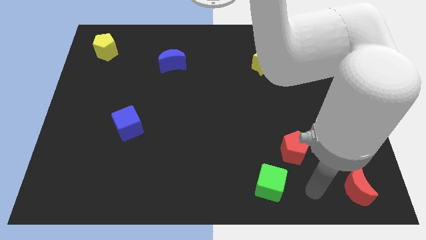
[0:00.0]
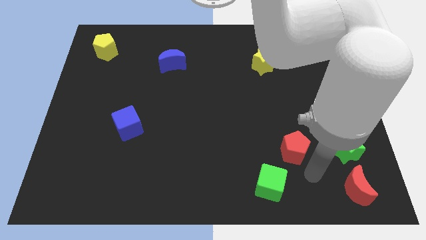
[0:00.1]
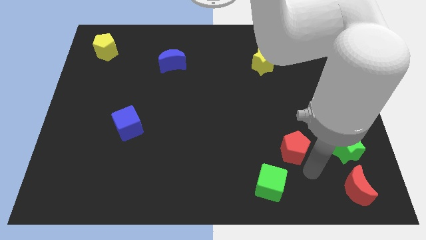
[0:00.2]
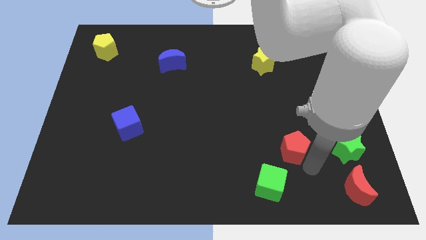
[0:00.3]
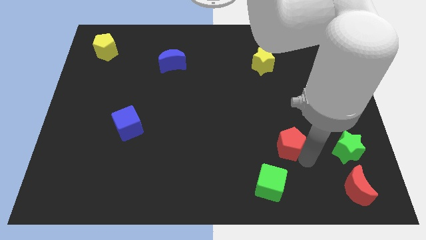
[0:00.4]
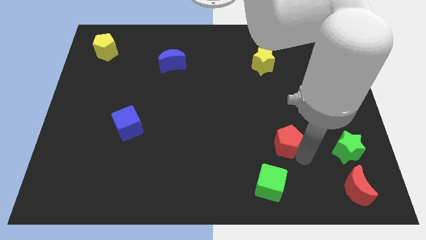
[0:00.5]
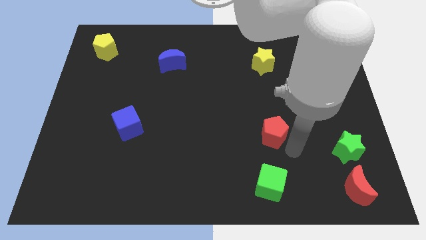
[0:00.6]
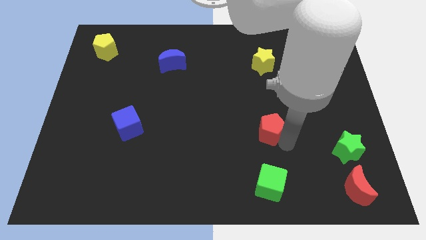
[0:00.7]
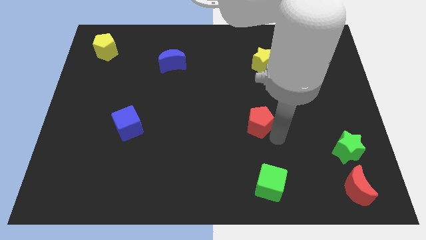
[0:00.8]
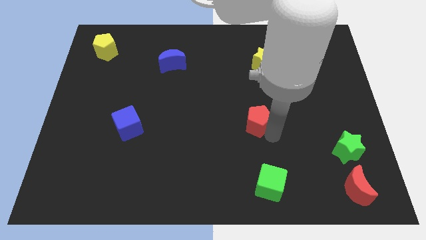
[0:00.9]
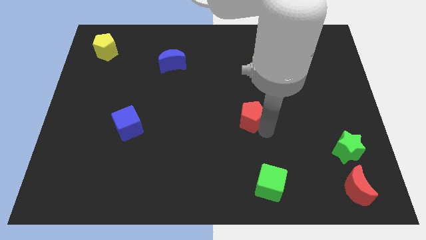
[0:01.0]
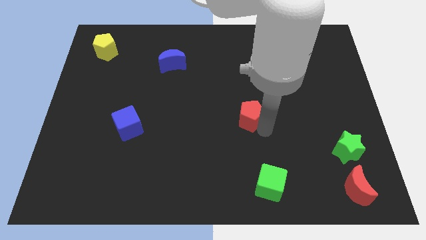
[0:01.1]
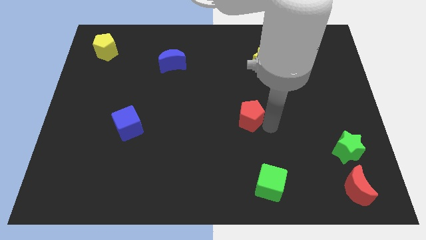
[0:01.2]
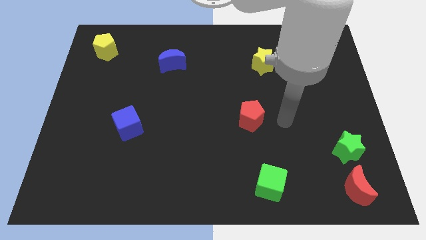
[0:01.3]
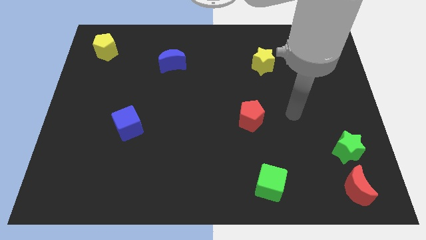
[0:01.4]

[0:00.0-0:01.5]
separate red pentagon from green cube

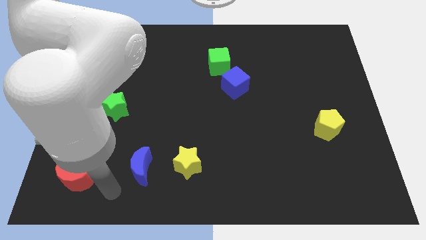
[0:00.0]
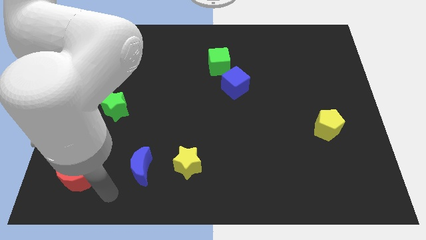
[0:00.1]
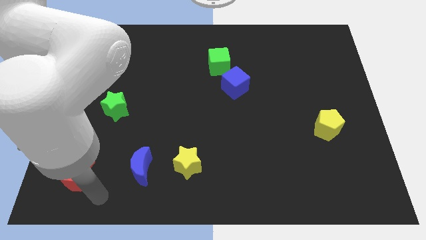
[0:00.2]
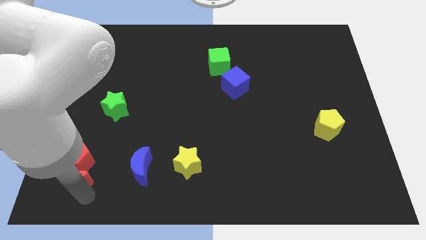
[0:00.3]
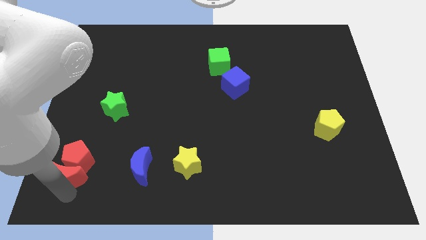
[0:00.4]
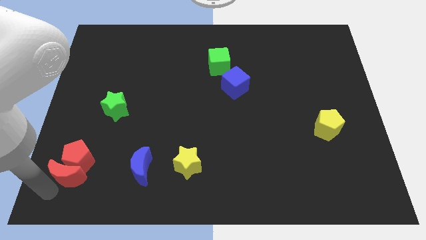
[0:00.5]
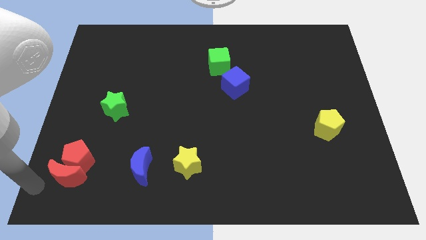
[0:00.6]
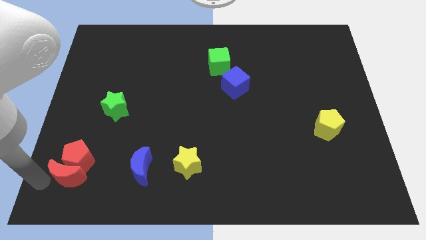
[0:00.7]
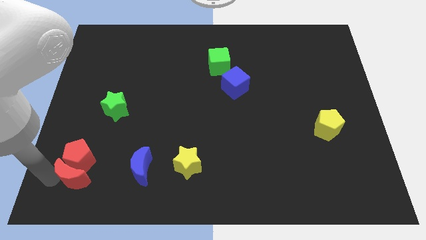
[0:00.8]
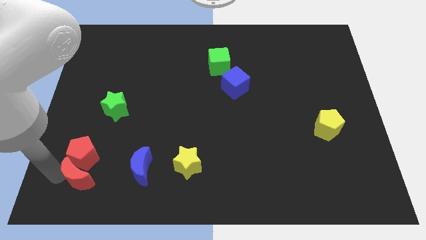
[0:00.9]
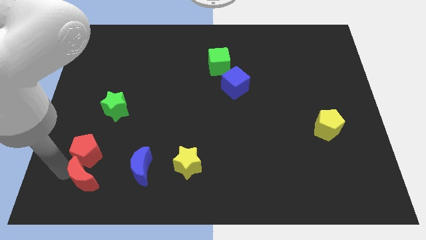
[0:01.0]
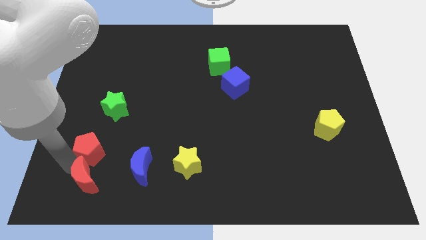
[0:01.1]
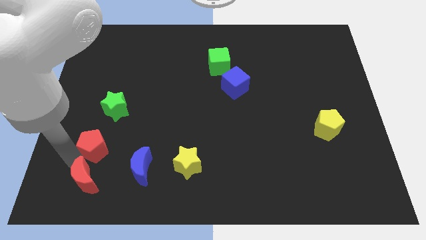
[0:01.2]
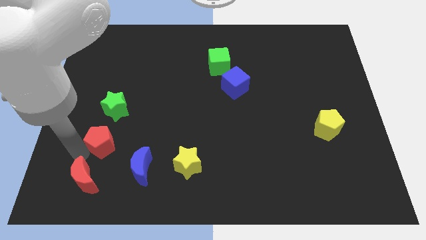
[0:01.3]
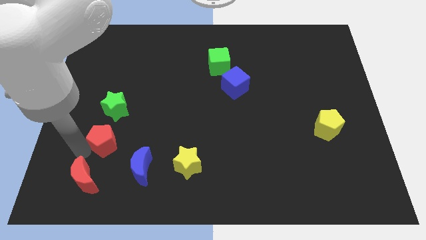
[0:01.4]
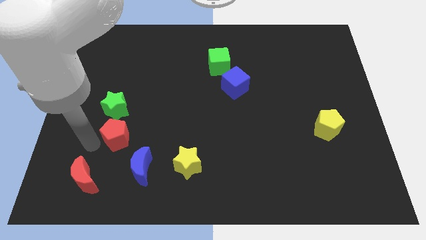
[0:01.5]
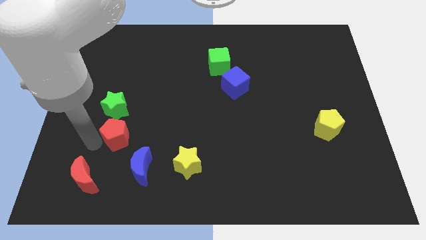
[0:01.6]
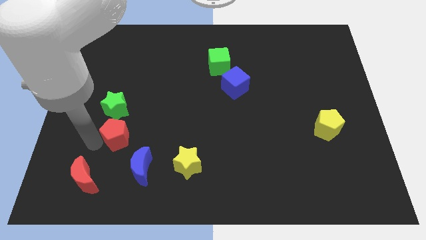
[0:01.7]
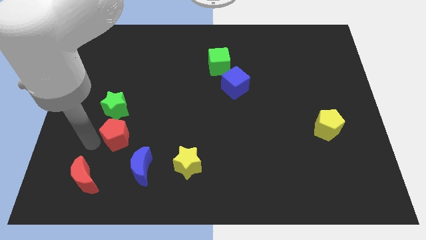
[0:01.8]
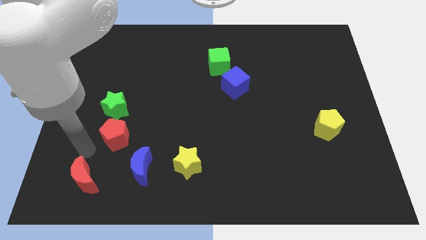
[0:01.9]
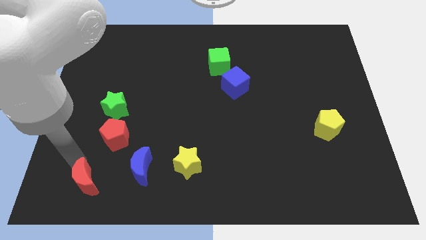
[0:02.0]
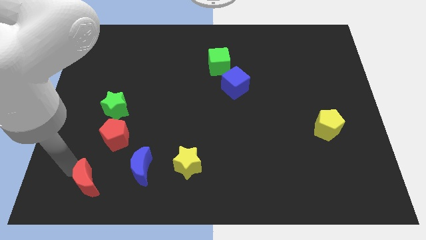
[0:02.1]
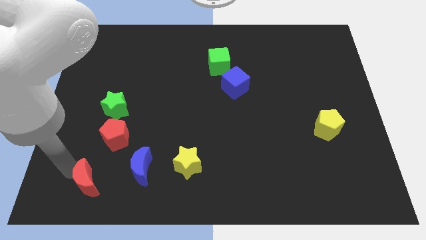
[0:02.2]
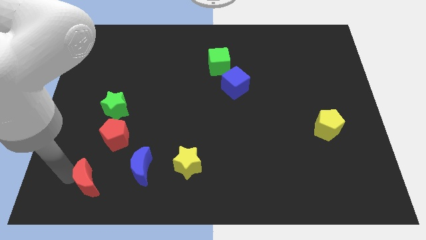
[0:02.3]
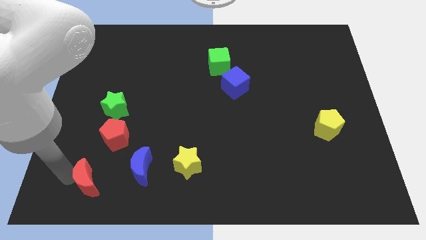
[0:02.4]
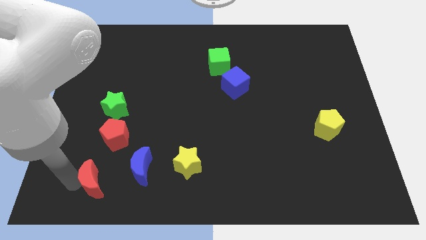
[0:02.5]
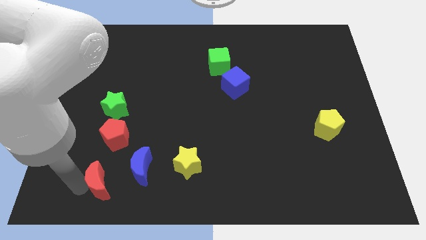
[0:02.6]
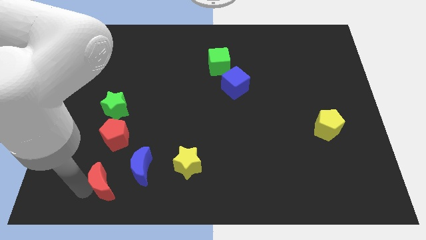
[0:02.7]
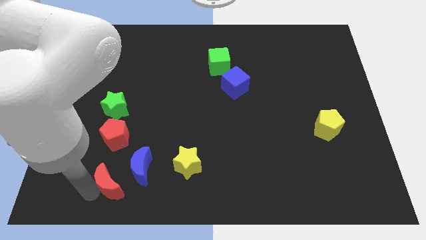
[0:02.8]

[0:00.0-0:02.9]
push red crescent below green star

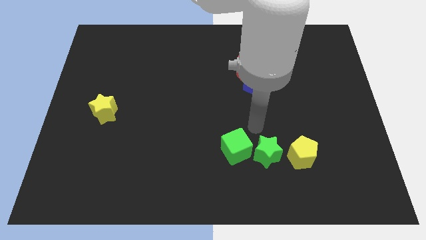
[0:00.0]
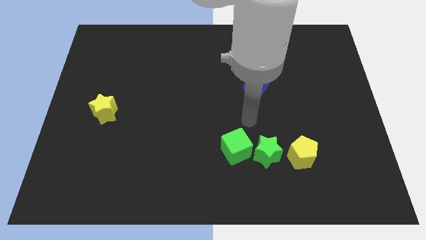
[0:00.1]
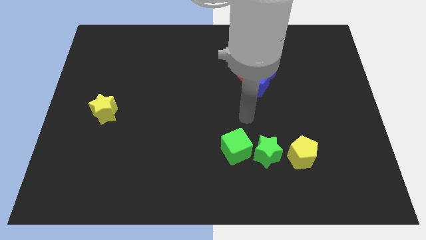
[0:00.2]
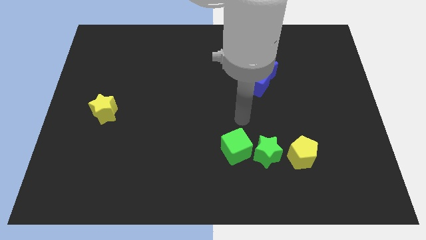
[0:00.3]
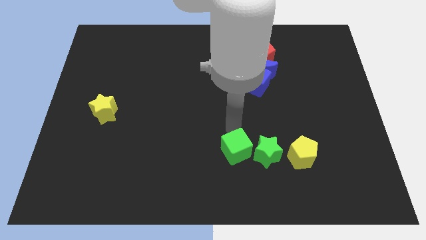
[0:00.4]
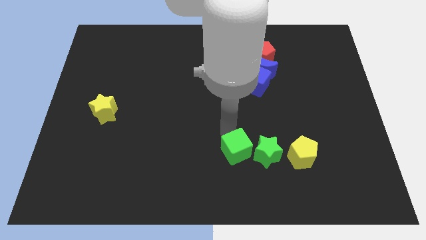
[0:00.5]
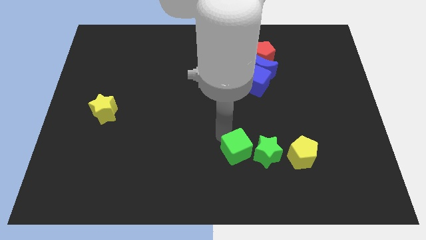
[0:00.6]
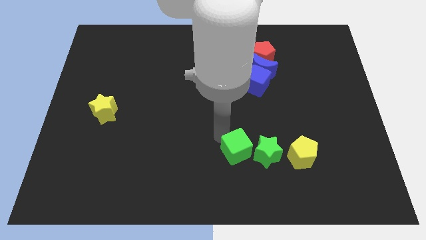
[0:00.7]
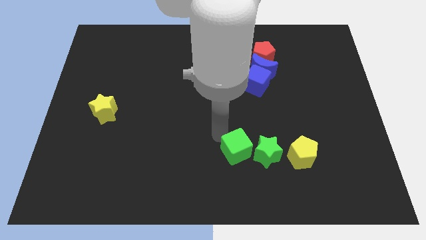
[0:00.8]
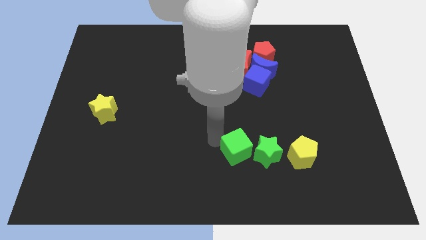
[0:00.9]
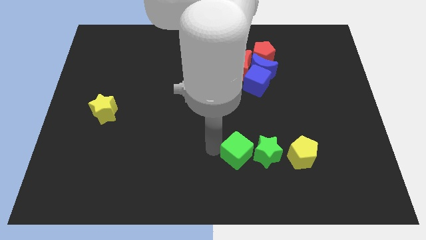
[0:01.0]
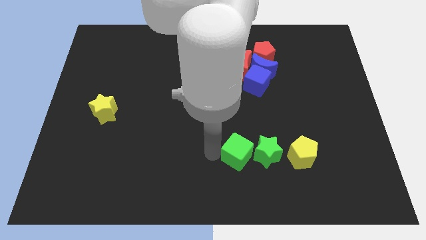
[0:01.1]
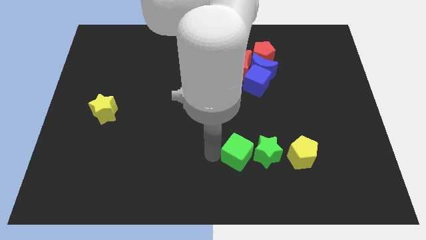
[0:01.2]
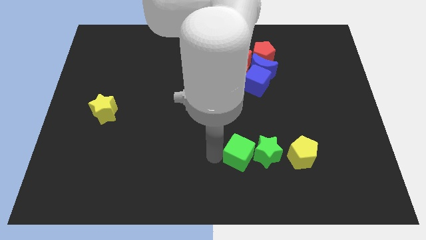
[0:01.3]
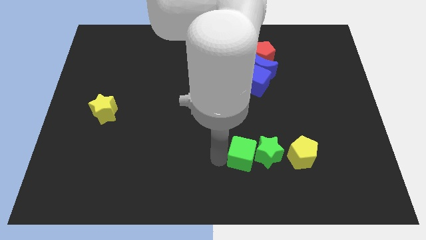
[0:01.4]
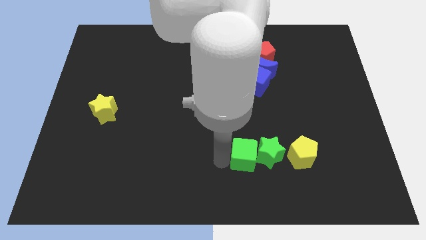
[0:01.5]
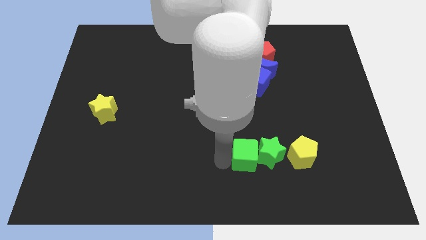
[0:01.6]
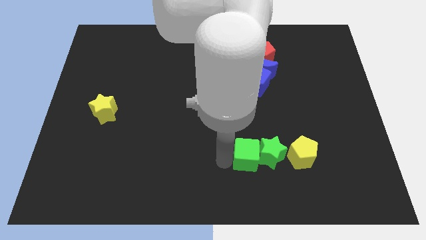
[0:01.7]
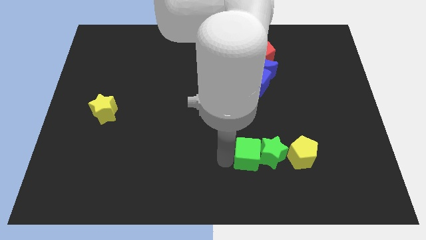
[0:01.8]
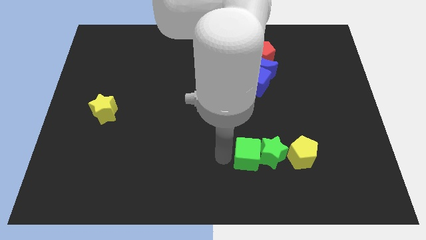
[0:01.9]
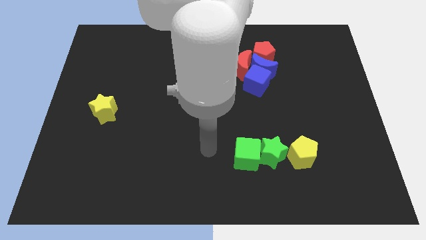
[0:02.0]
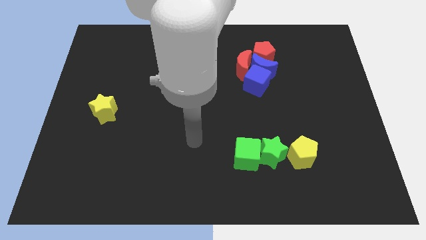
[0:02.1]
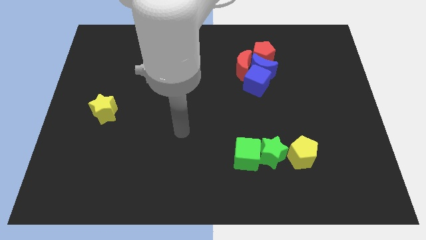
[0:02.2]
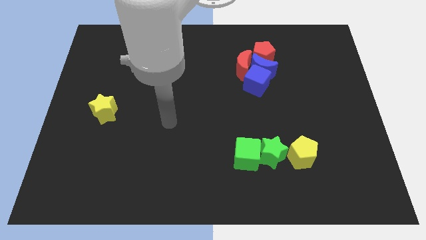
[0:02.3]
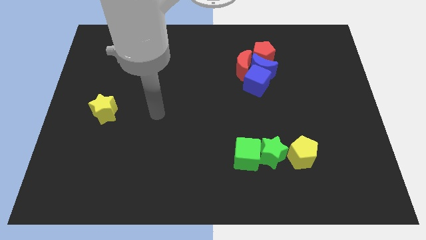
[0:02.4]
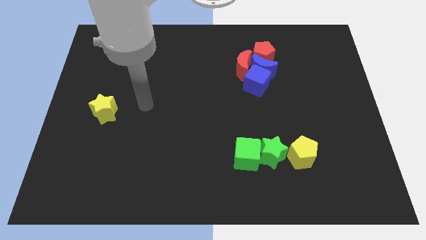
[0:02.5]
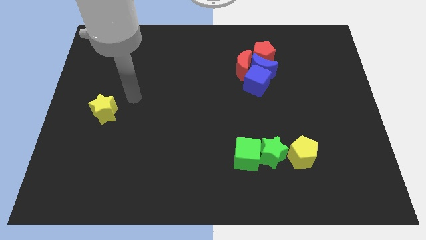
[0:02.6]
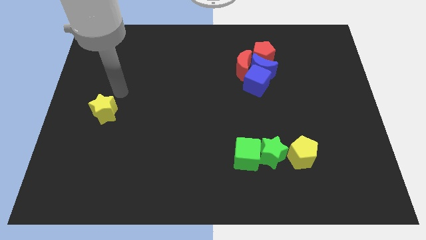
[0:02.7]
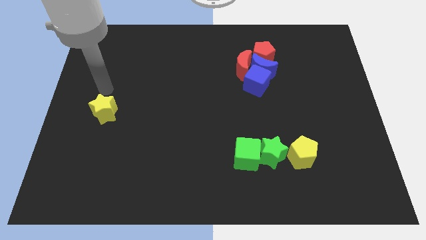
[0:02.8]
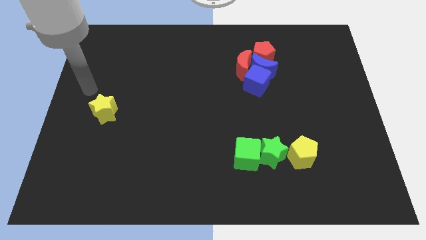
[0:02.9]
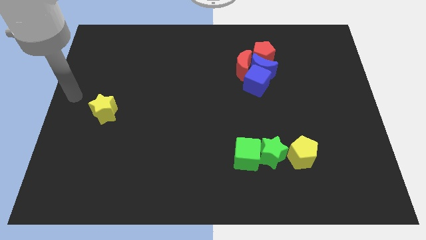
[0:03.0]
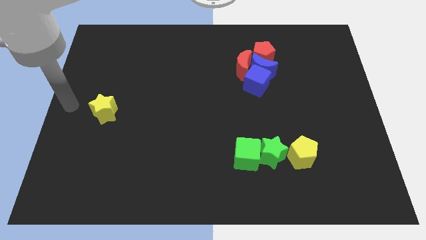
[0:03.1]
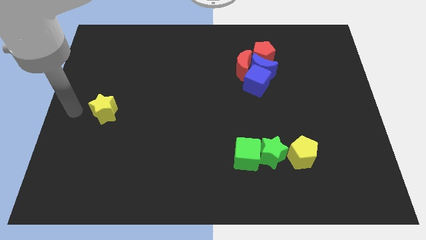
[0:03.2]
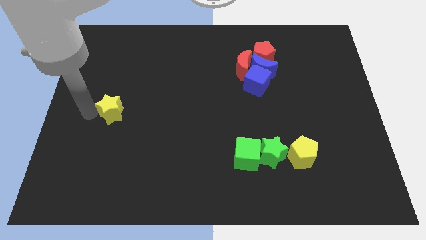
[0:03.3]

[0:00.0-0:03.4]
move your arm to the left side of the yellow star

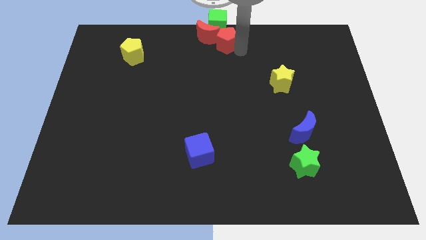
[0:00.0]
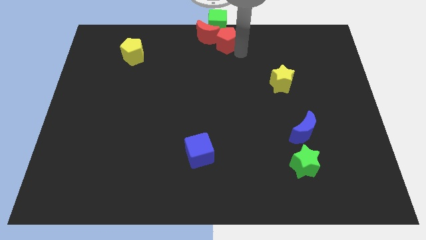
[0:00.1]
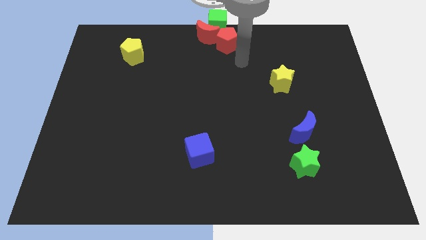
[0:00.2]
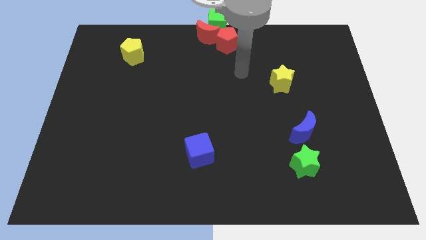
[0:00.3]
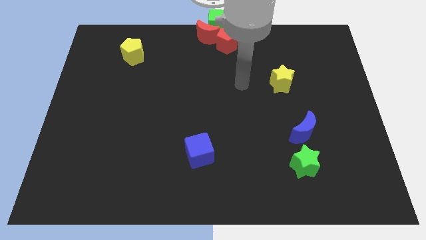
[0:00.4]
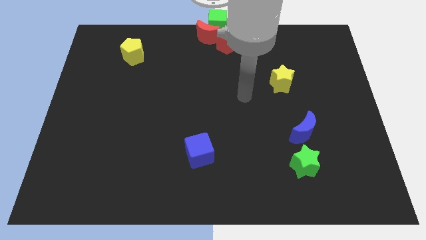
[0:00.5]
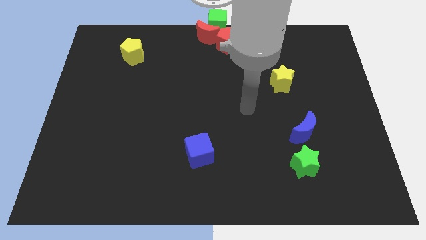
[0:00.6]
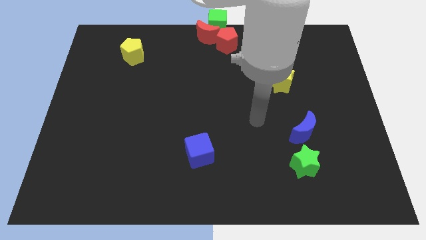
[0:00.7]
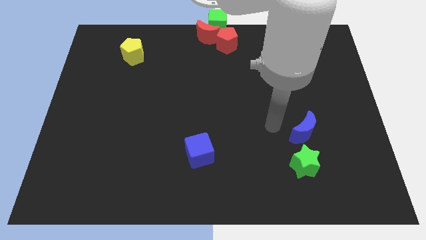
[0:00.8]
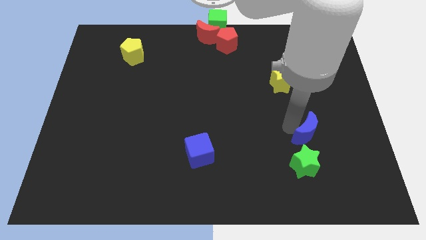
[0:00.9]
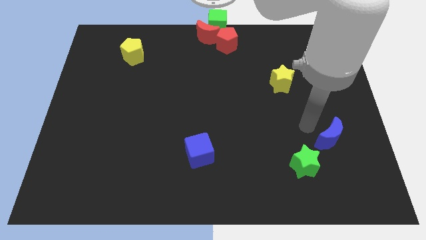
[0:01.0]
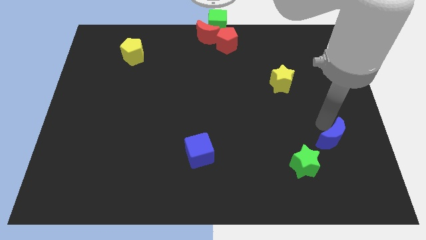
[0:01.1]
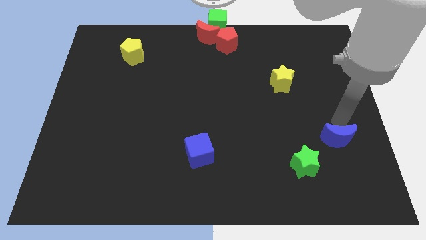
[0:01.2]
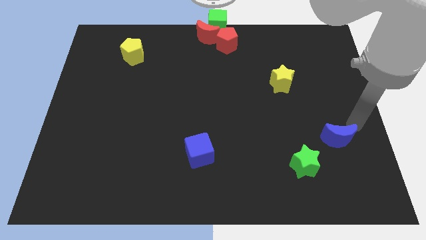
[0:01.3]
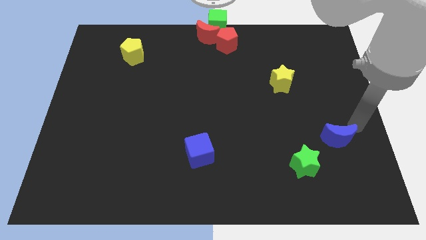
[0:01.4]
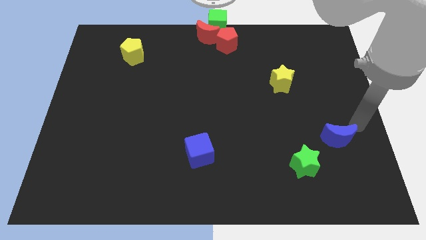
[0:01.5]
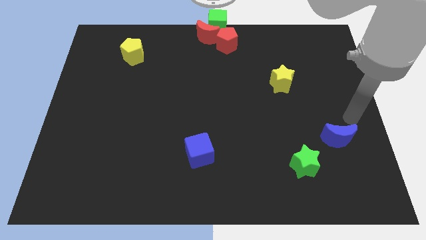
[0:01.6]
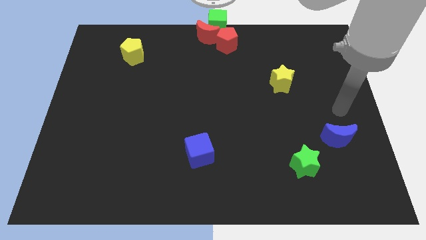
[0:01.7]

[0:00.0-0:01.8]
move the blue moon towards the top right side of the green star
